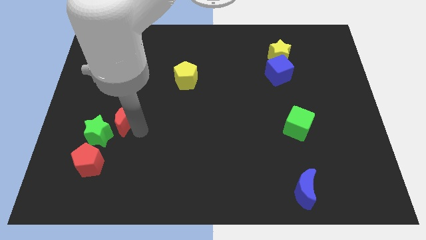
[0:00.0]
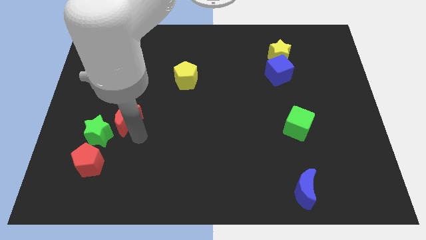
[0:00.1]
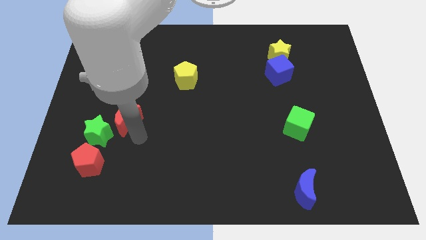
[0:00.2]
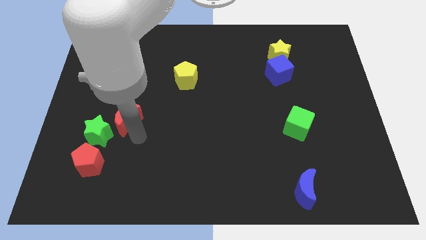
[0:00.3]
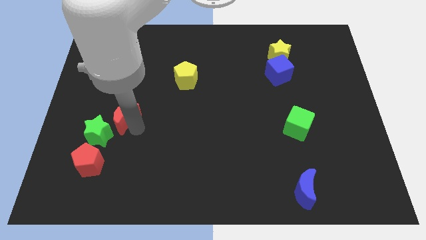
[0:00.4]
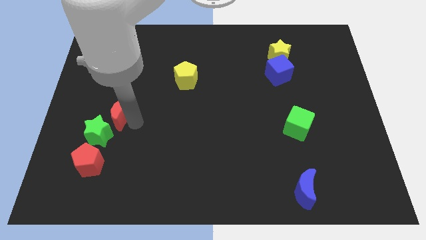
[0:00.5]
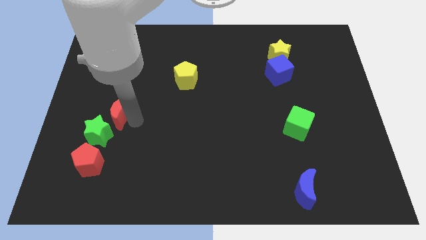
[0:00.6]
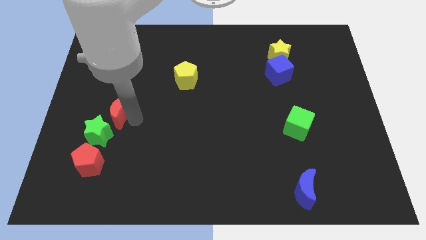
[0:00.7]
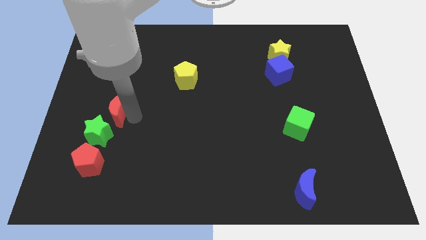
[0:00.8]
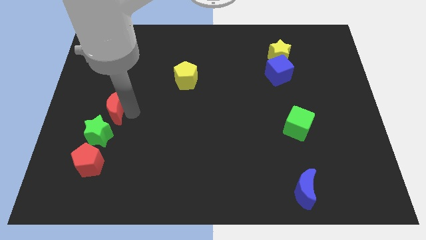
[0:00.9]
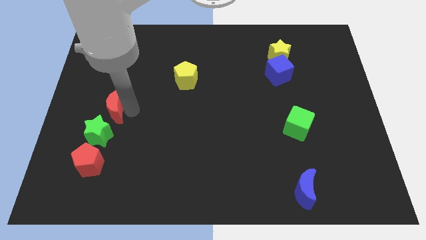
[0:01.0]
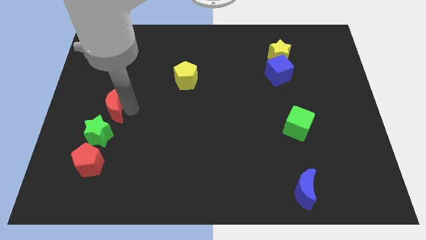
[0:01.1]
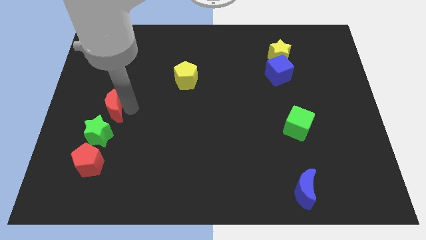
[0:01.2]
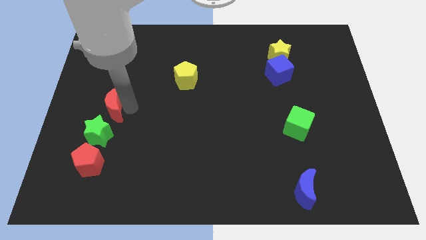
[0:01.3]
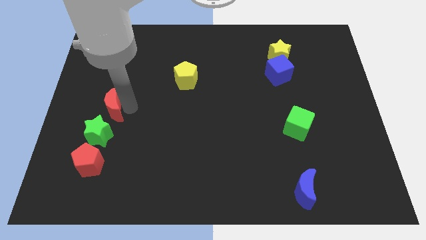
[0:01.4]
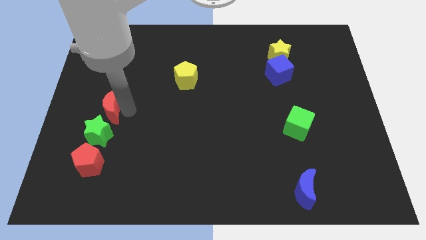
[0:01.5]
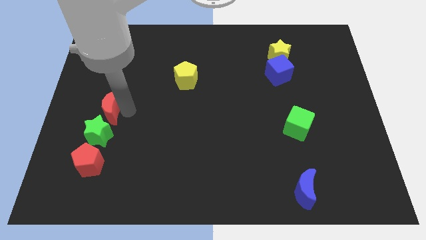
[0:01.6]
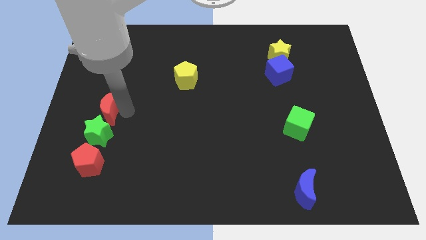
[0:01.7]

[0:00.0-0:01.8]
push the red crescent to the top of the green star

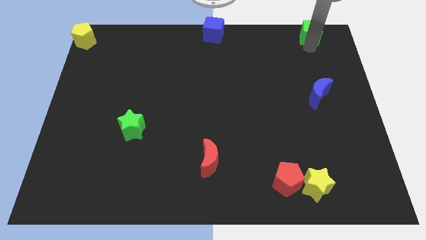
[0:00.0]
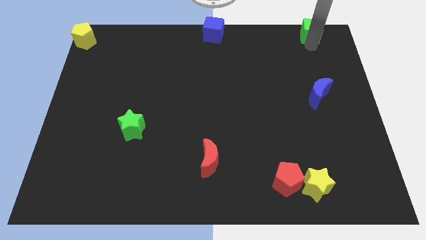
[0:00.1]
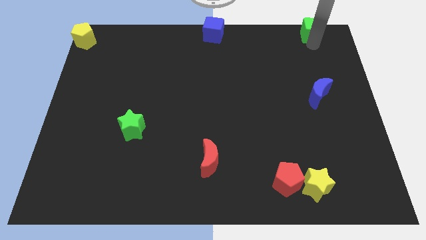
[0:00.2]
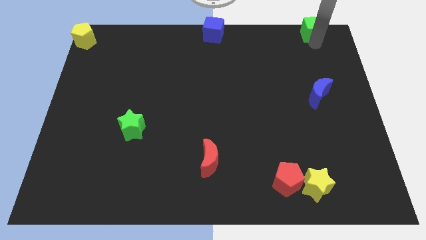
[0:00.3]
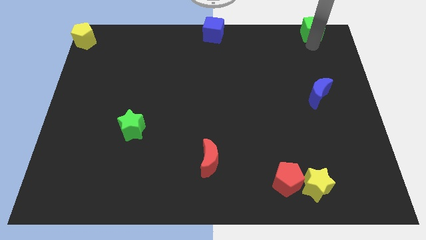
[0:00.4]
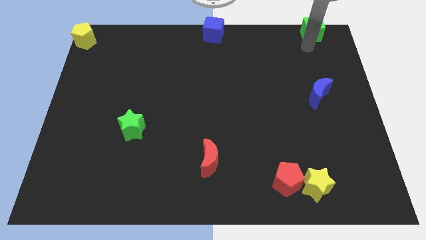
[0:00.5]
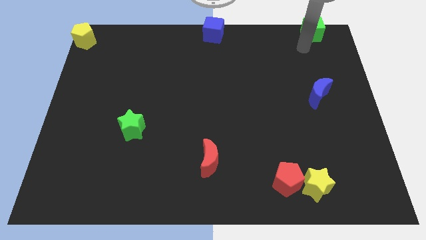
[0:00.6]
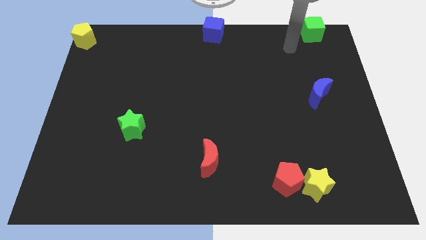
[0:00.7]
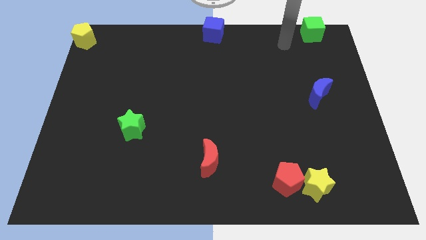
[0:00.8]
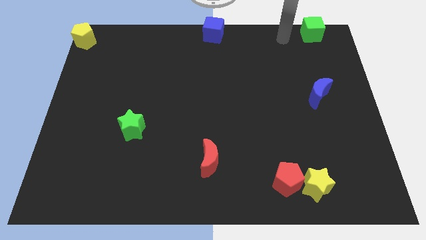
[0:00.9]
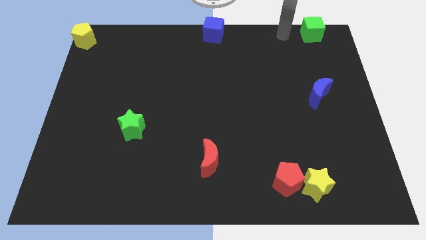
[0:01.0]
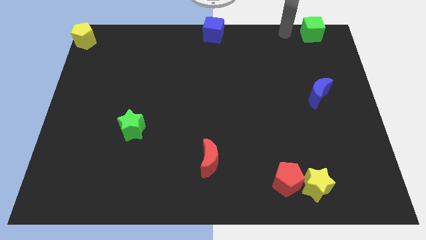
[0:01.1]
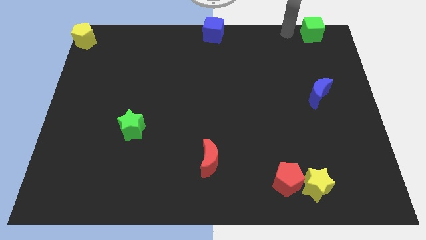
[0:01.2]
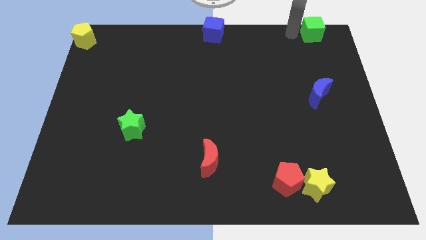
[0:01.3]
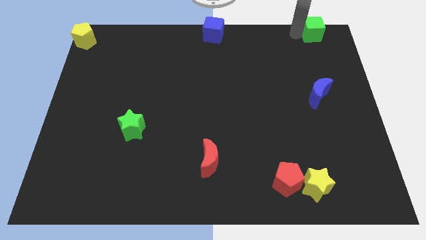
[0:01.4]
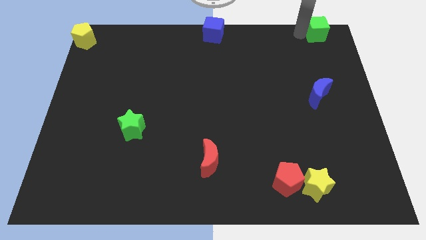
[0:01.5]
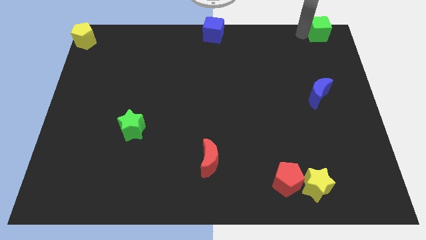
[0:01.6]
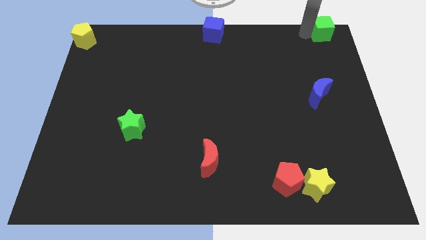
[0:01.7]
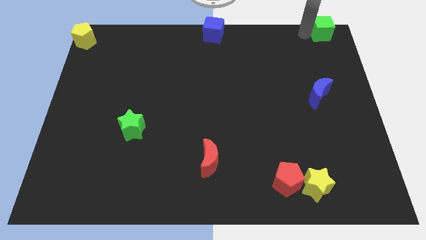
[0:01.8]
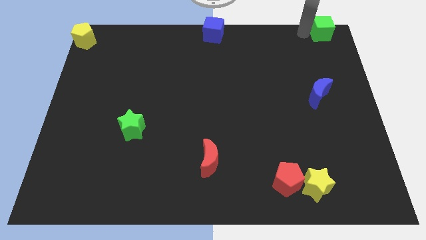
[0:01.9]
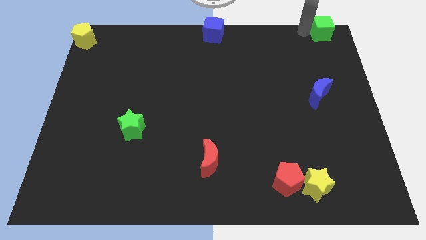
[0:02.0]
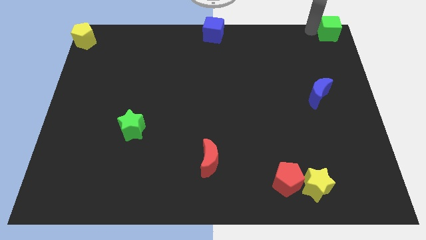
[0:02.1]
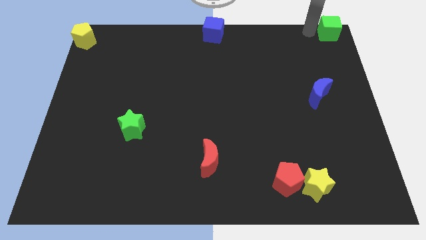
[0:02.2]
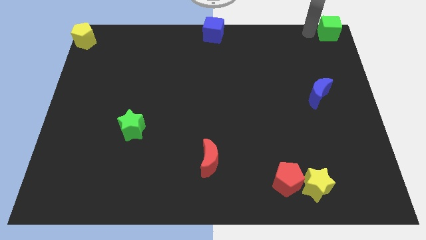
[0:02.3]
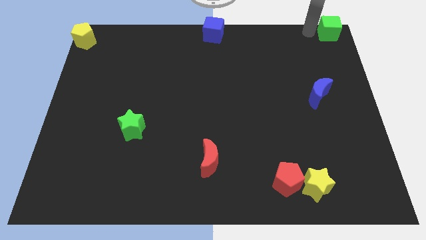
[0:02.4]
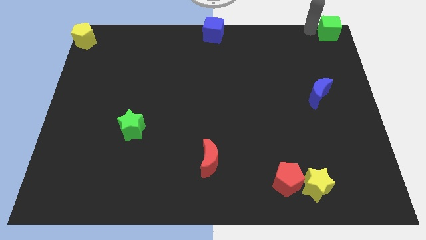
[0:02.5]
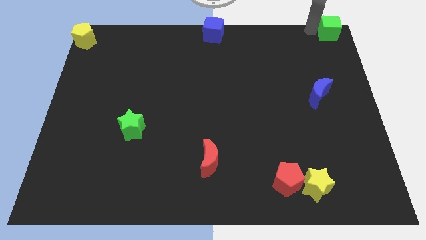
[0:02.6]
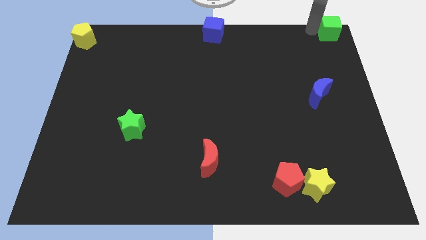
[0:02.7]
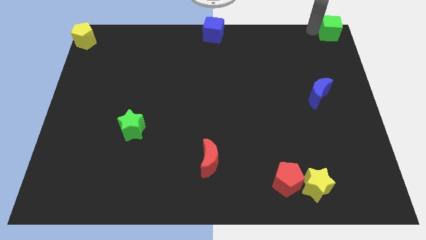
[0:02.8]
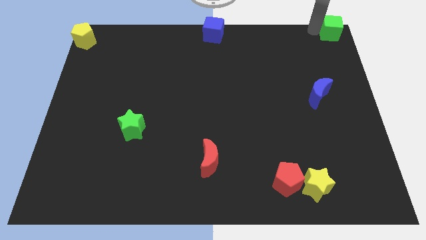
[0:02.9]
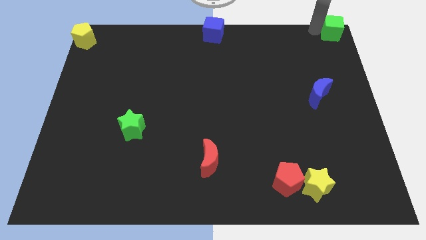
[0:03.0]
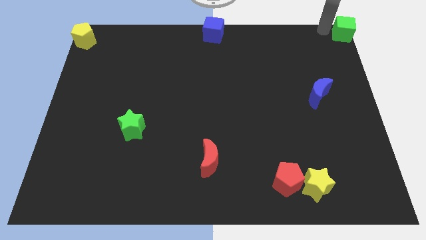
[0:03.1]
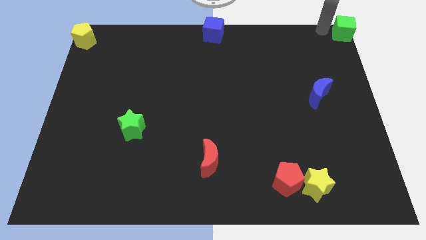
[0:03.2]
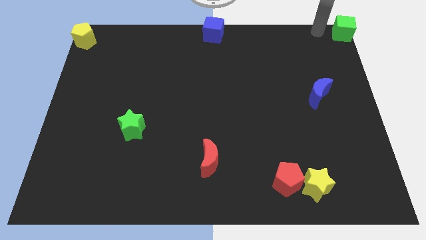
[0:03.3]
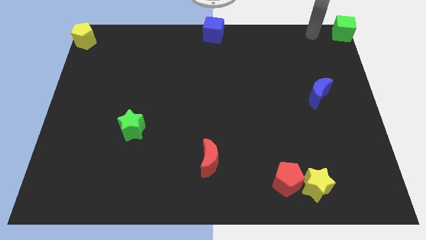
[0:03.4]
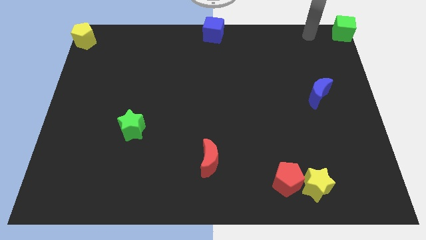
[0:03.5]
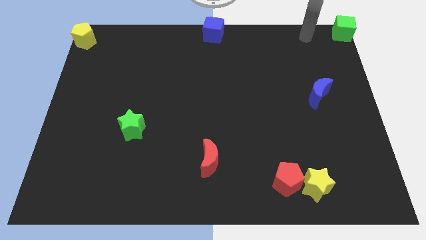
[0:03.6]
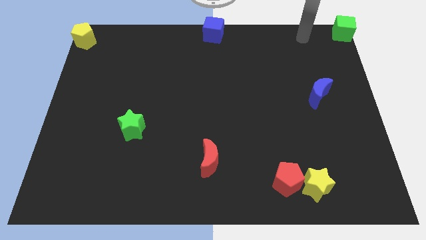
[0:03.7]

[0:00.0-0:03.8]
put the green cube at the top right corner of the board

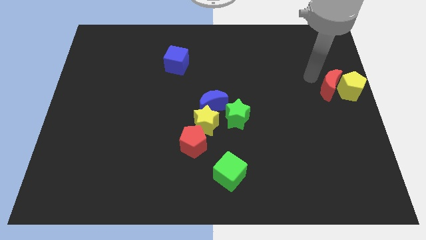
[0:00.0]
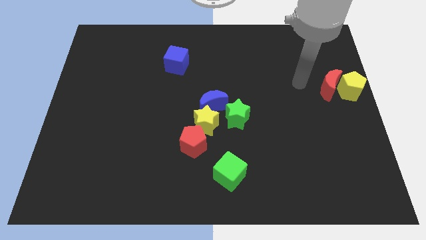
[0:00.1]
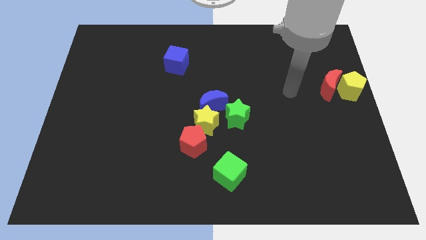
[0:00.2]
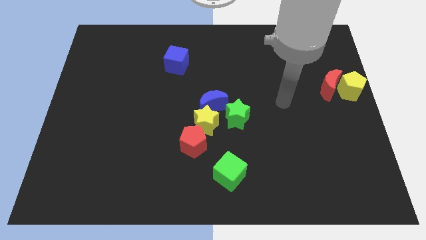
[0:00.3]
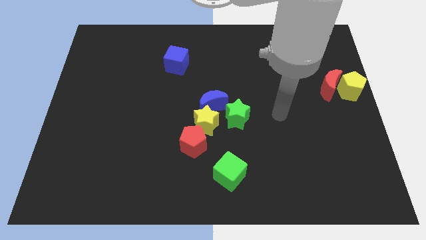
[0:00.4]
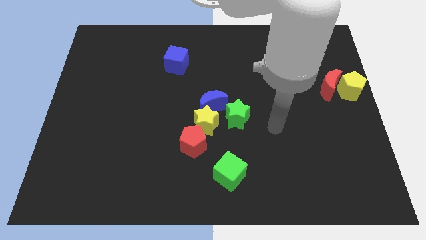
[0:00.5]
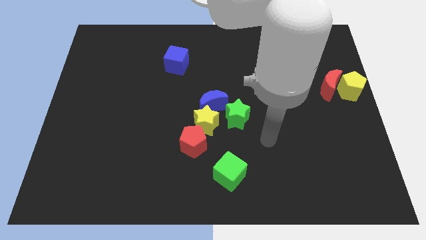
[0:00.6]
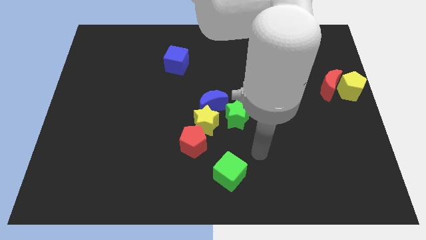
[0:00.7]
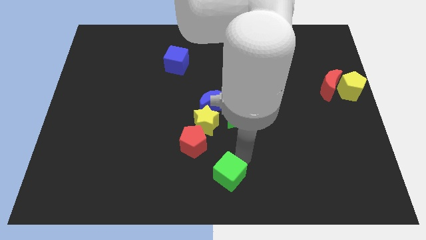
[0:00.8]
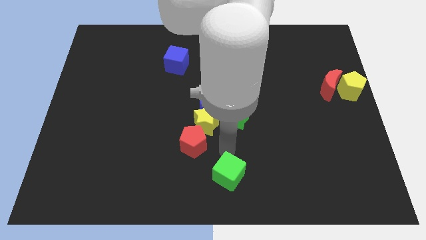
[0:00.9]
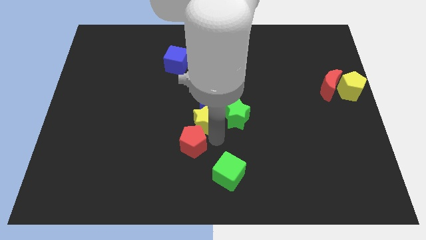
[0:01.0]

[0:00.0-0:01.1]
point your arm at the right of the red pentagon

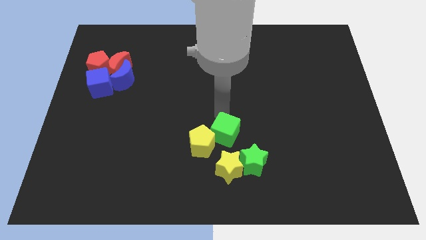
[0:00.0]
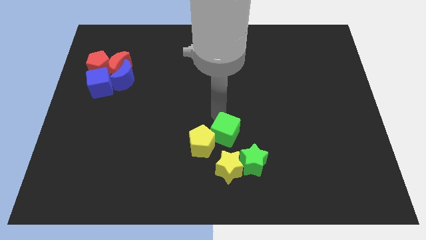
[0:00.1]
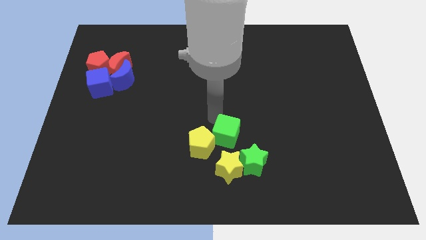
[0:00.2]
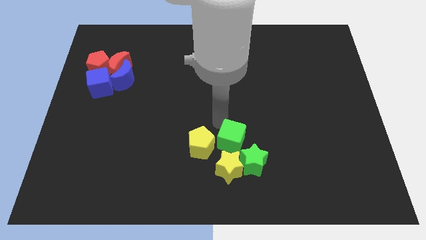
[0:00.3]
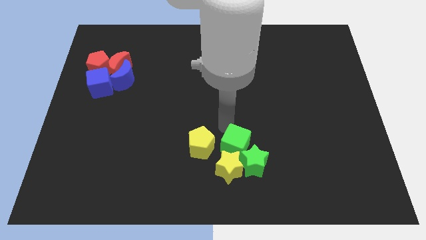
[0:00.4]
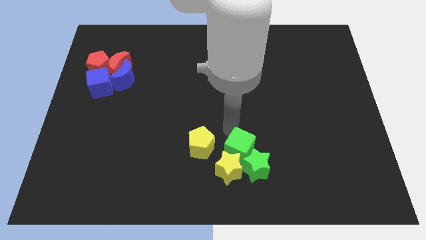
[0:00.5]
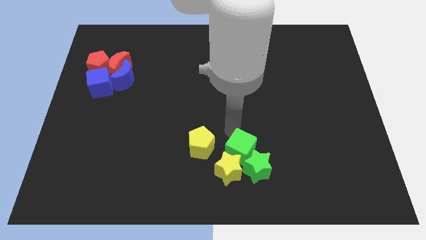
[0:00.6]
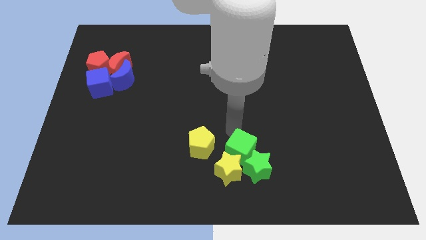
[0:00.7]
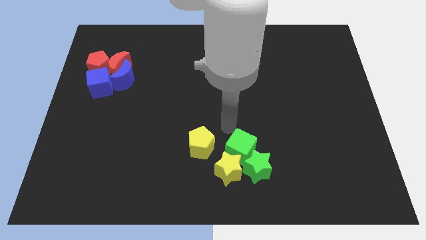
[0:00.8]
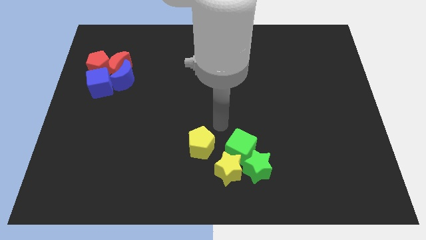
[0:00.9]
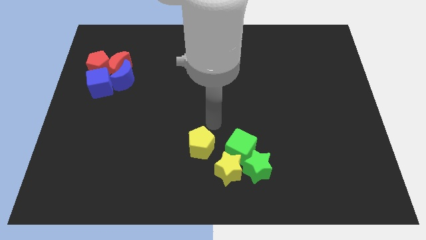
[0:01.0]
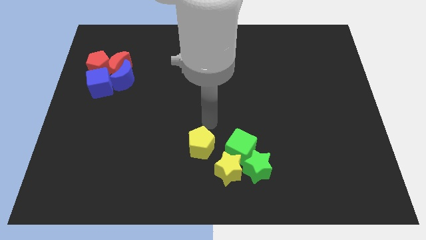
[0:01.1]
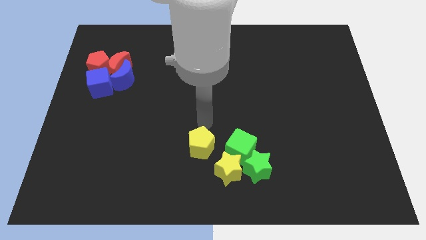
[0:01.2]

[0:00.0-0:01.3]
push green cube towards green star

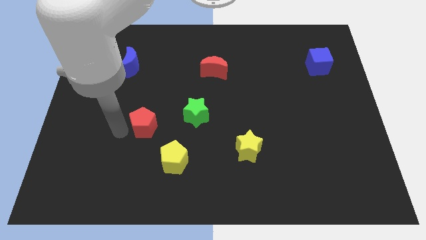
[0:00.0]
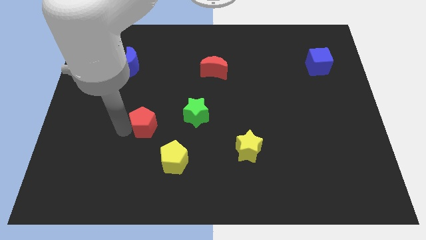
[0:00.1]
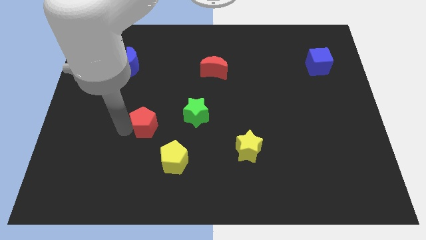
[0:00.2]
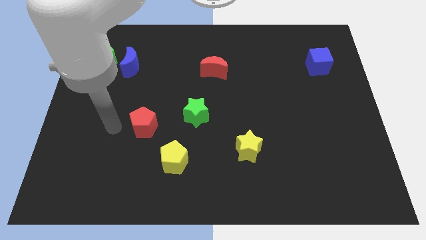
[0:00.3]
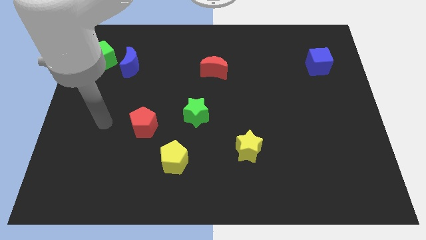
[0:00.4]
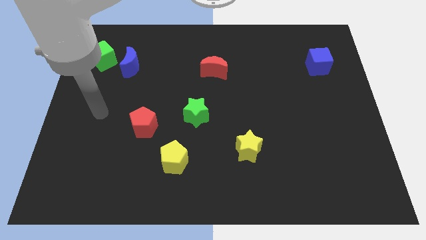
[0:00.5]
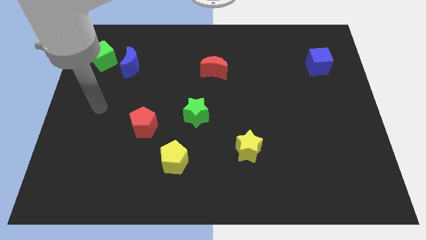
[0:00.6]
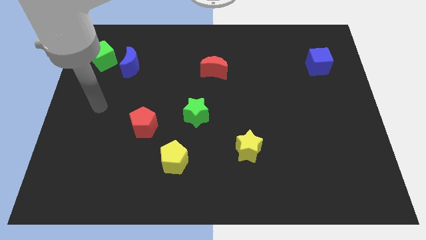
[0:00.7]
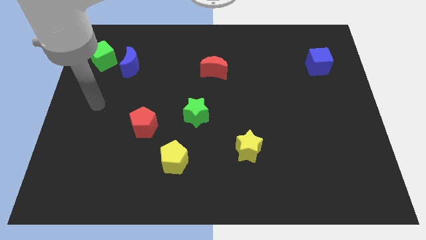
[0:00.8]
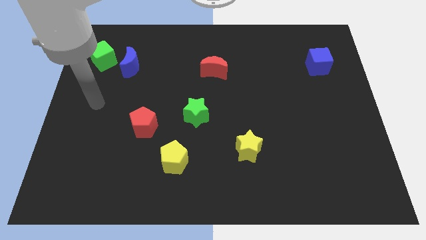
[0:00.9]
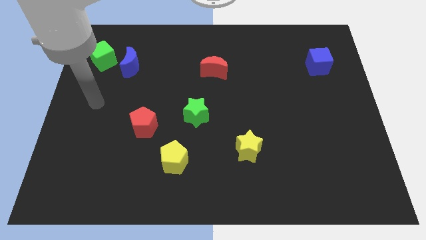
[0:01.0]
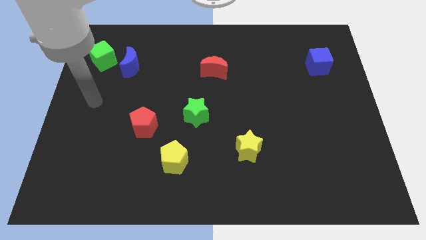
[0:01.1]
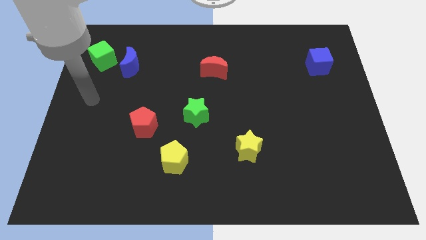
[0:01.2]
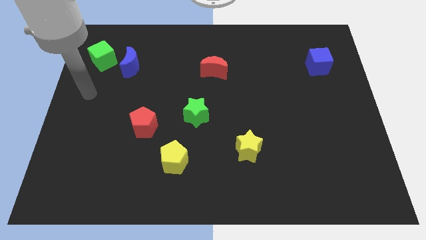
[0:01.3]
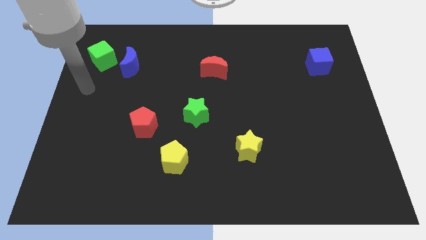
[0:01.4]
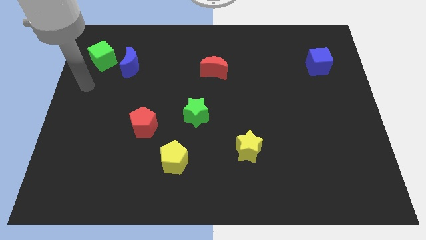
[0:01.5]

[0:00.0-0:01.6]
move your arm away from the red pentagon
